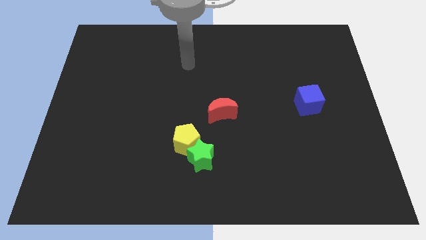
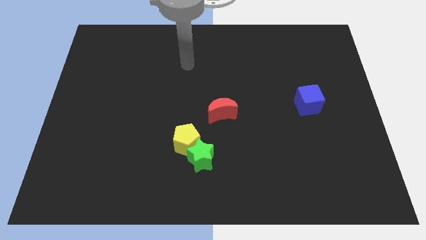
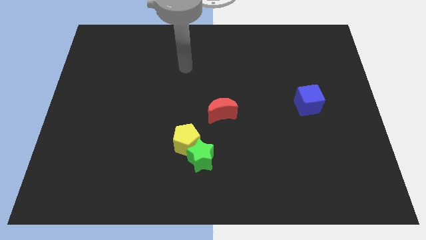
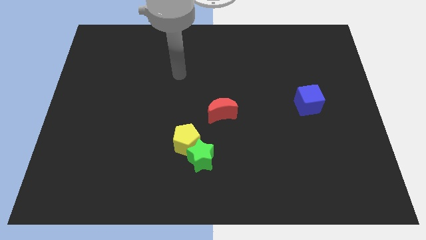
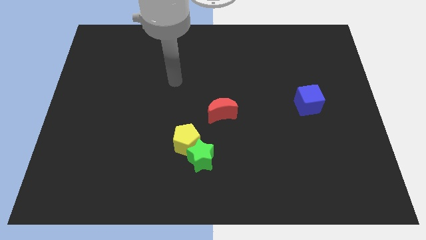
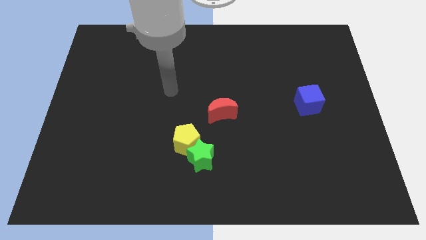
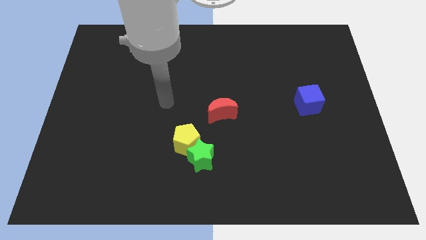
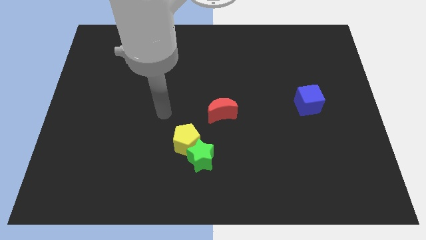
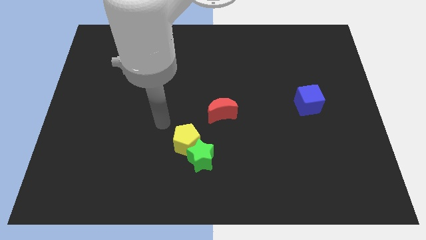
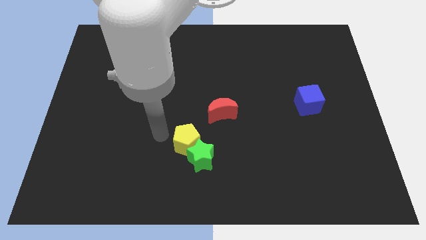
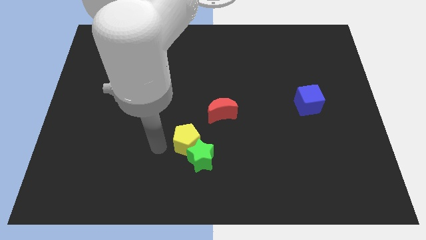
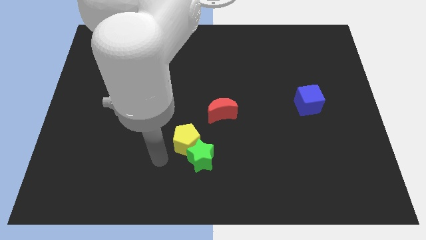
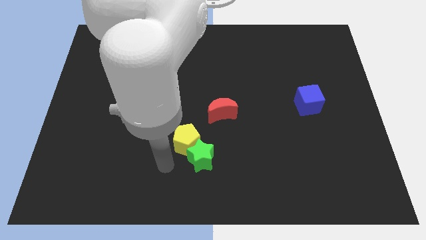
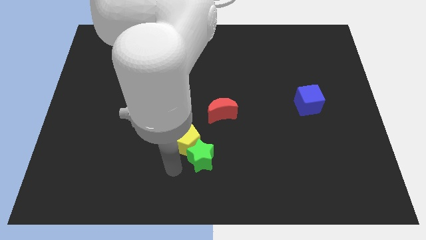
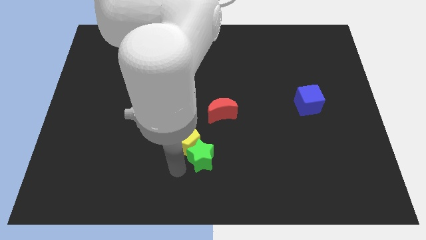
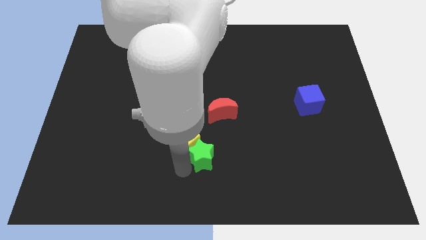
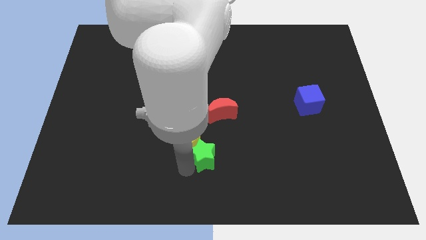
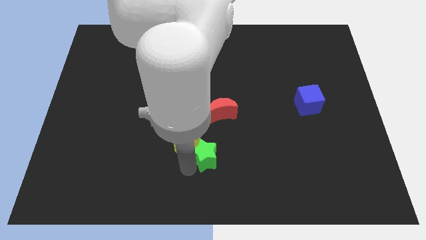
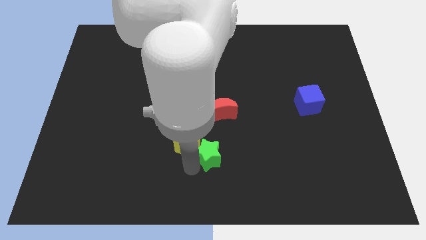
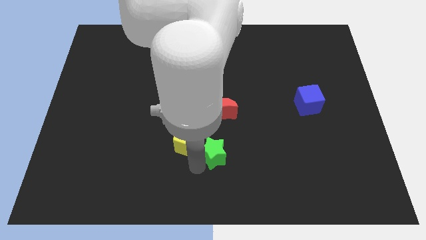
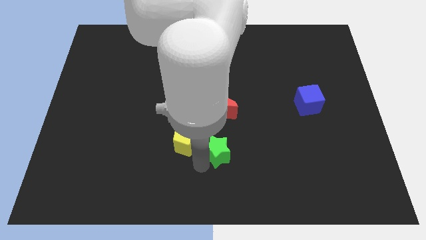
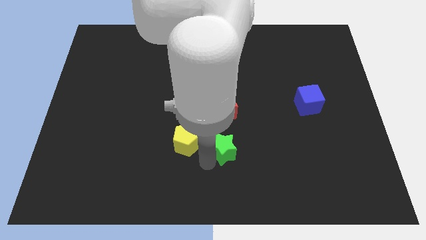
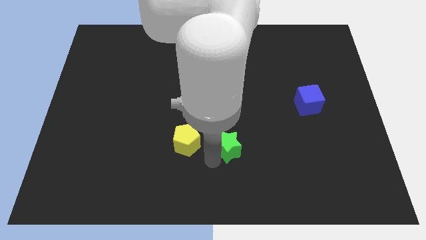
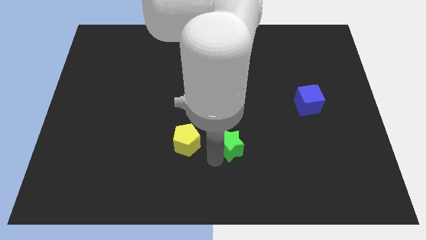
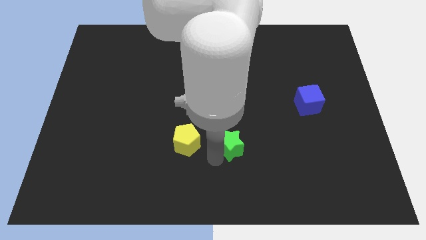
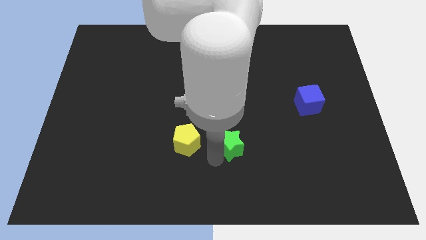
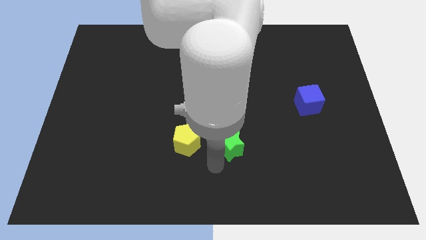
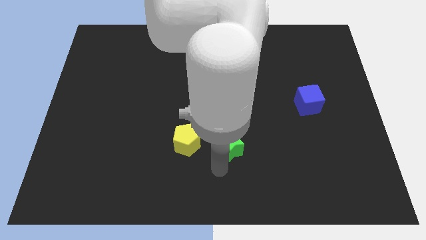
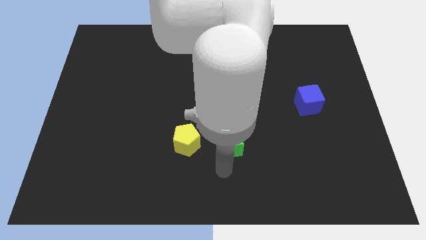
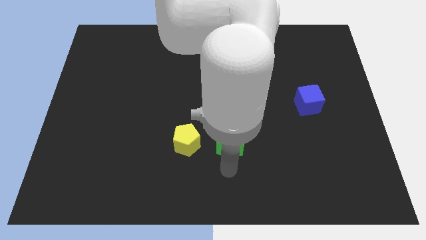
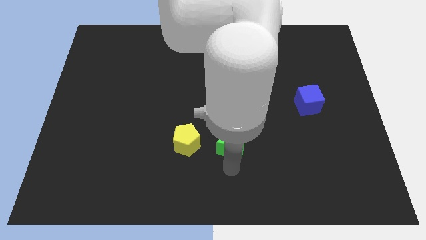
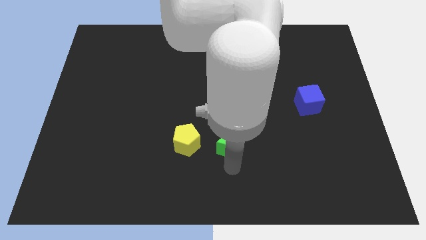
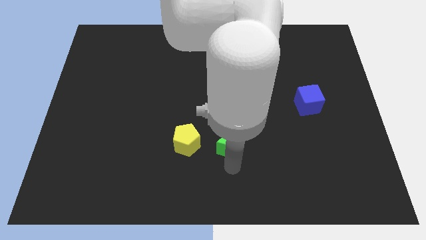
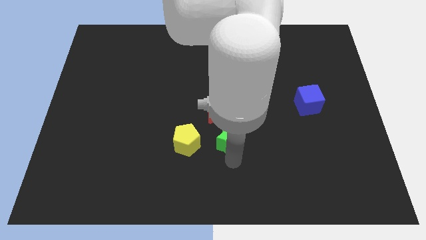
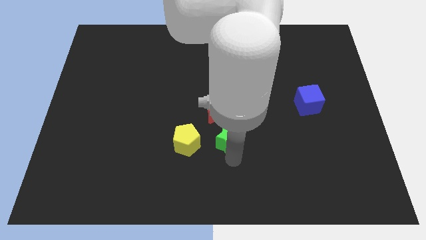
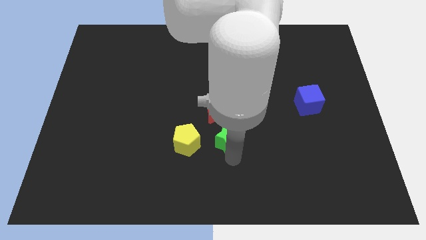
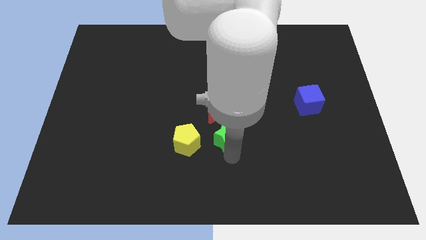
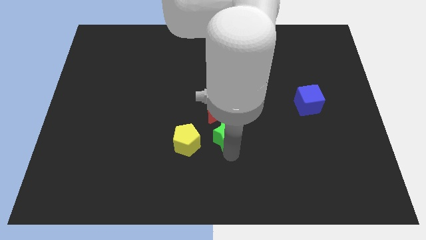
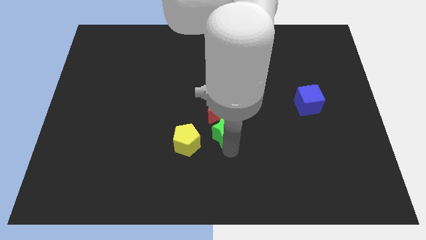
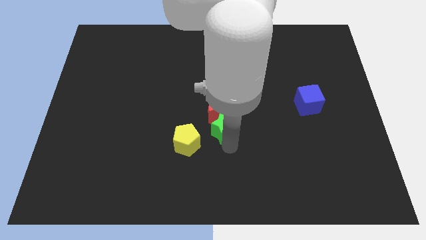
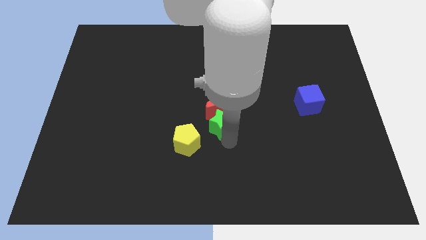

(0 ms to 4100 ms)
move the green block towards the red moon

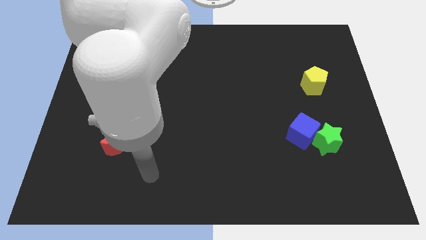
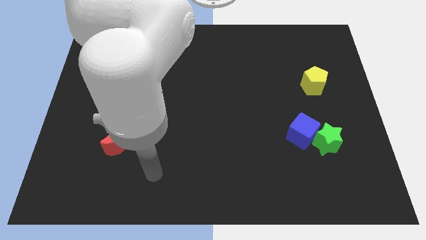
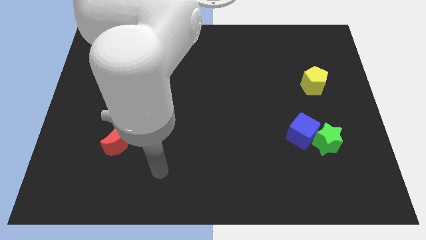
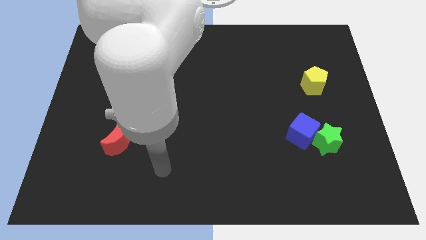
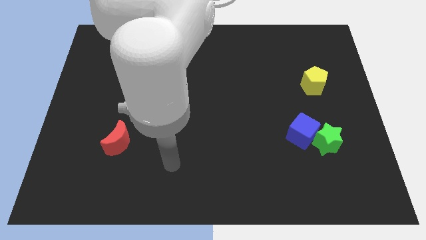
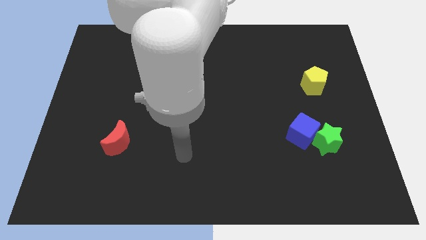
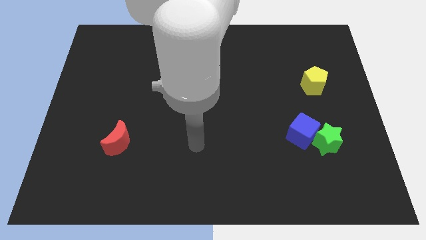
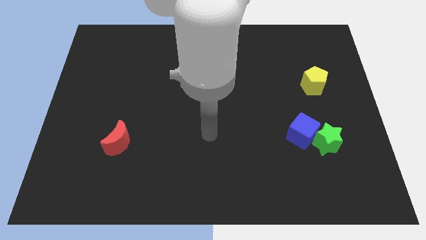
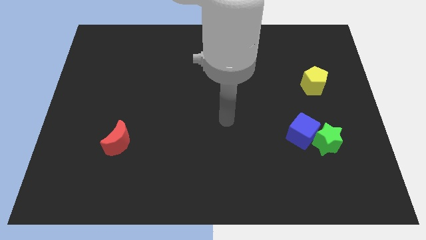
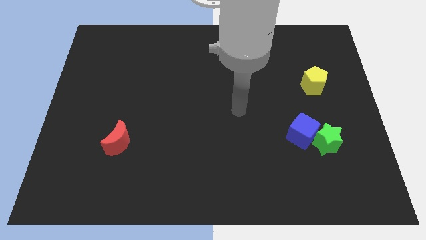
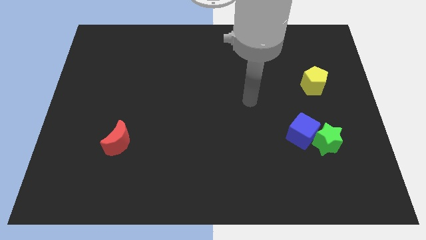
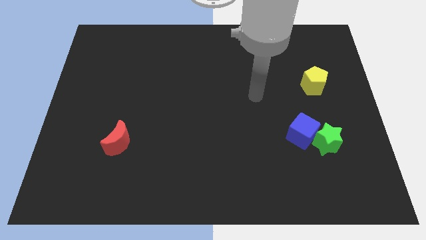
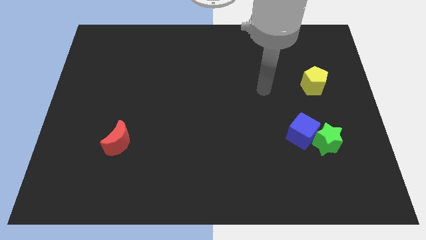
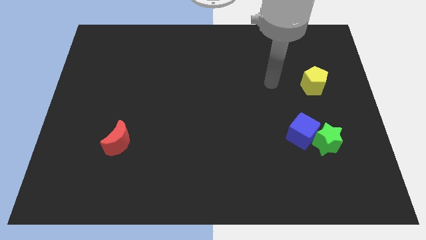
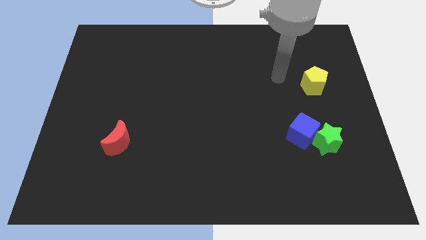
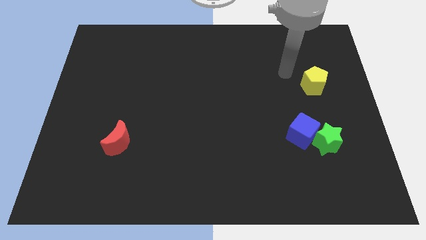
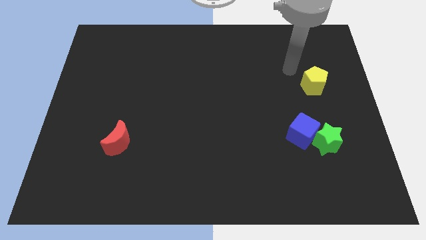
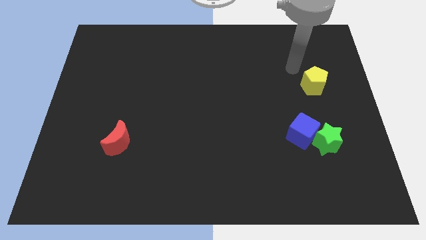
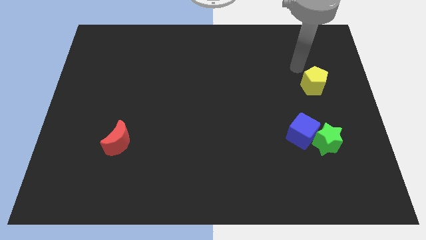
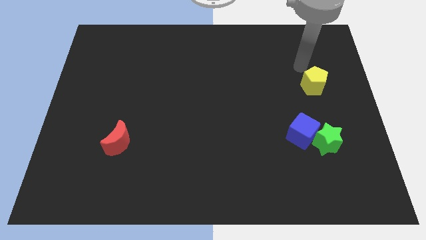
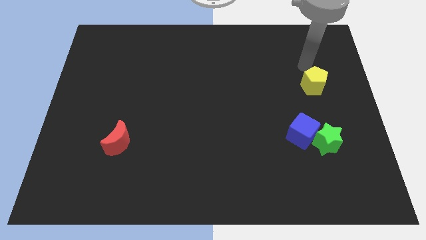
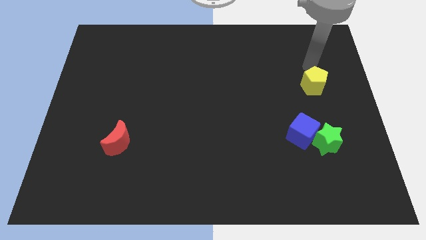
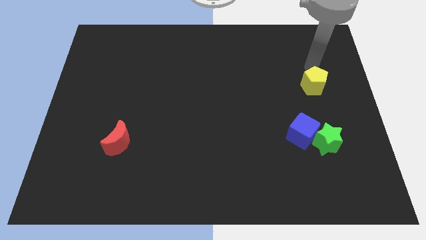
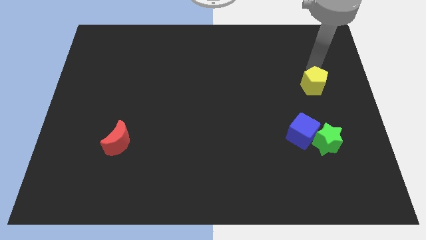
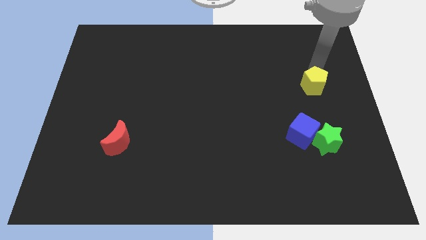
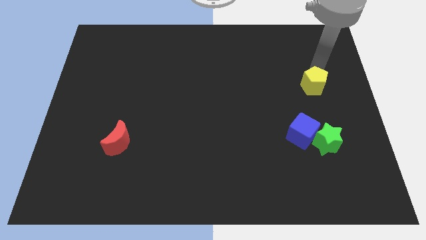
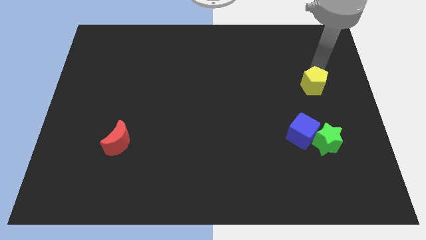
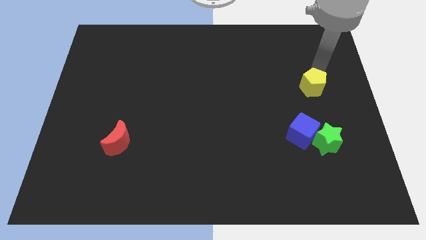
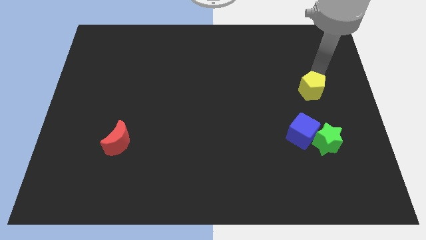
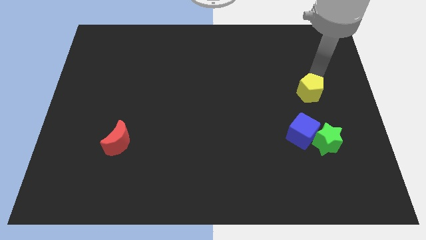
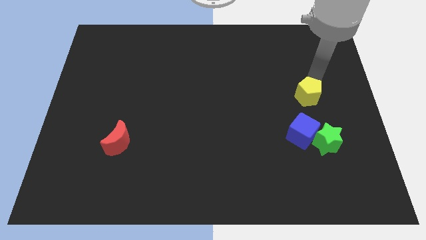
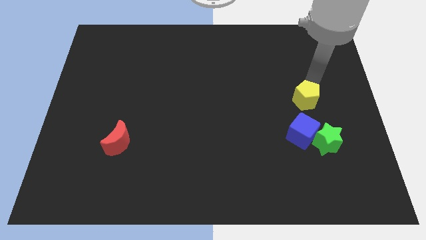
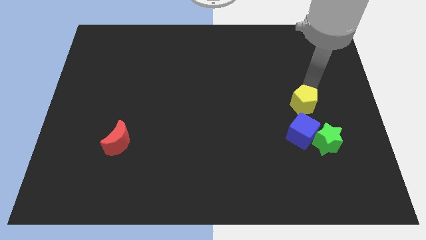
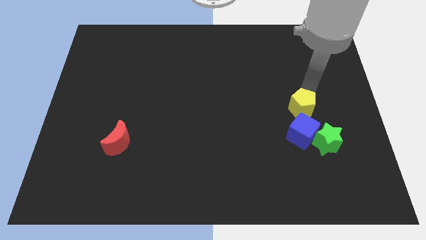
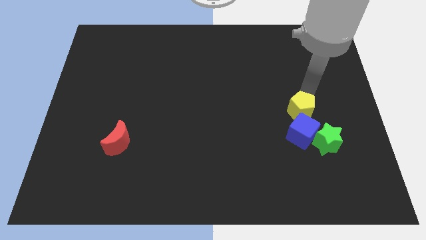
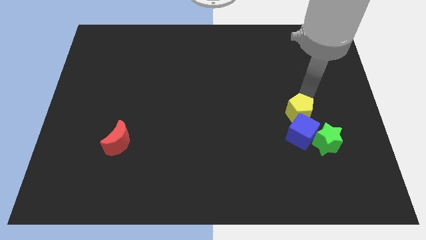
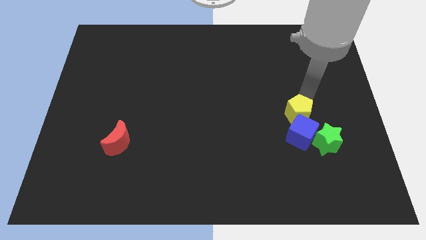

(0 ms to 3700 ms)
put the yellow pentagon next to the cube

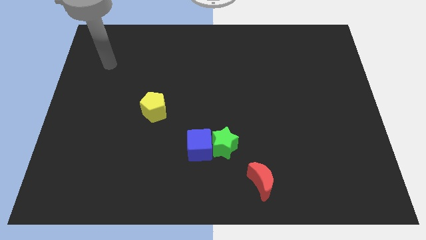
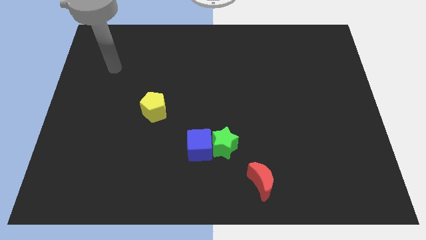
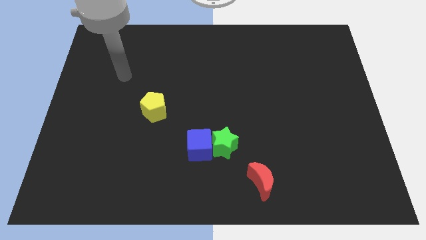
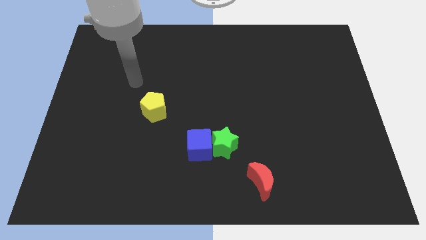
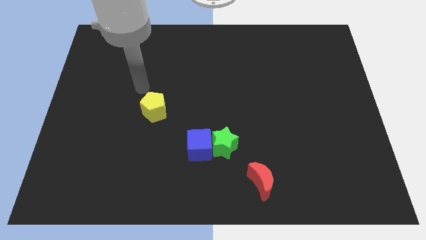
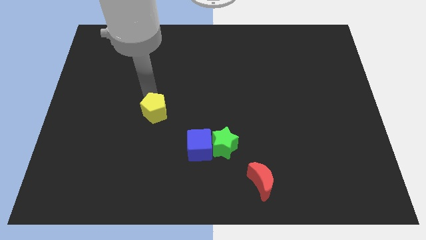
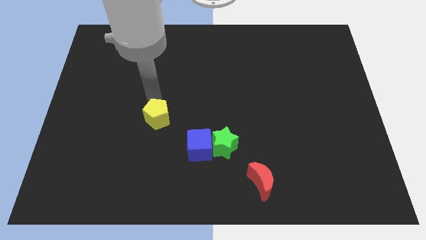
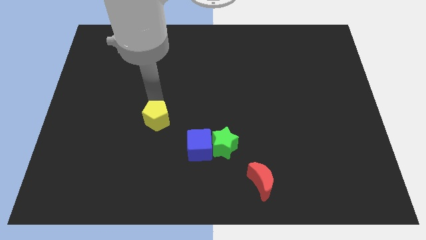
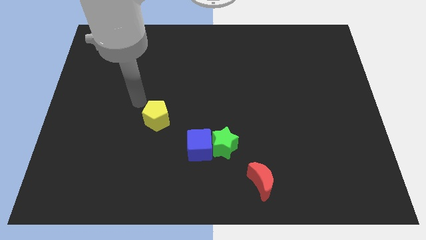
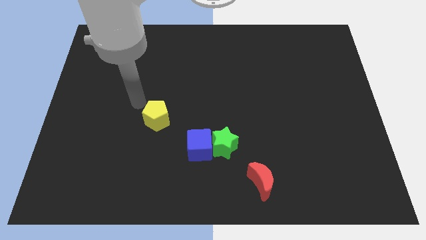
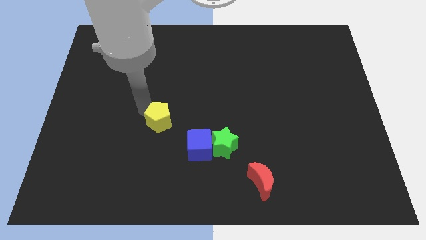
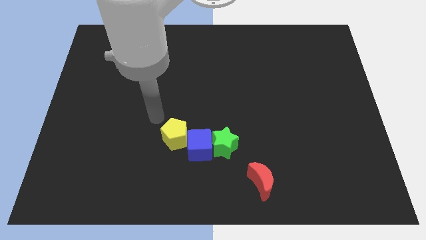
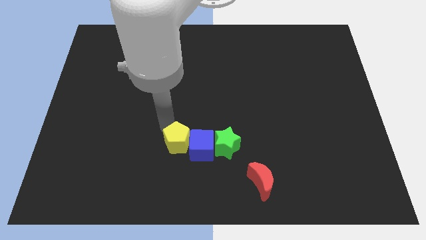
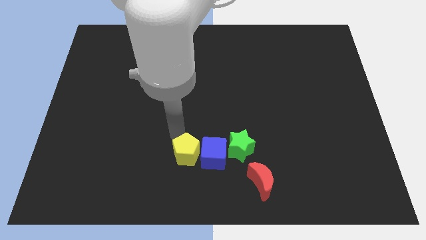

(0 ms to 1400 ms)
move the yellow pentagon to the blue cube
